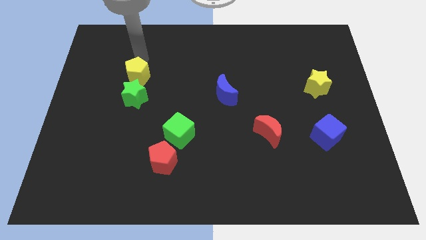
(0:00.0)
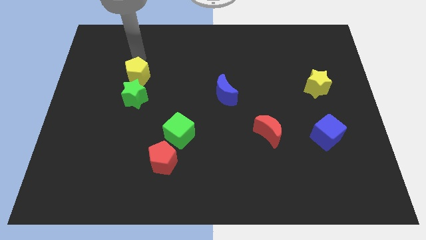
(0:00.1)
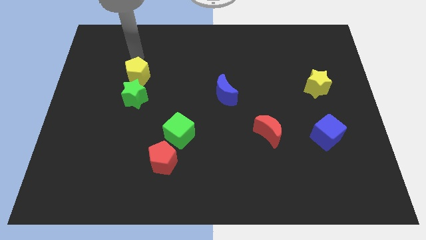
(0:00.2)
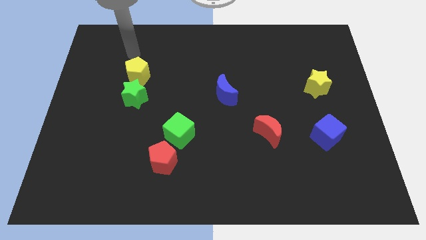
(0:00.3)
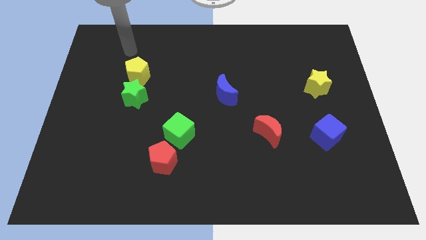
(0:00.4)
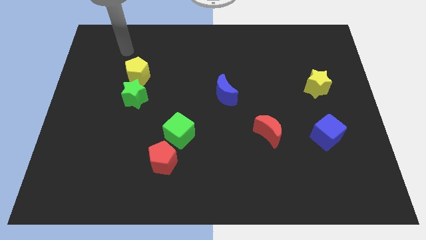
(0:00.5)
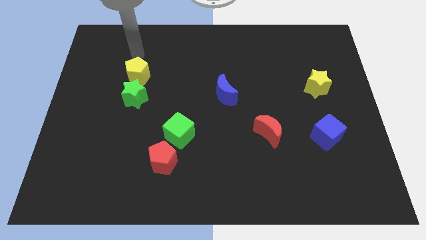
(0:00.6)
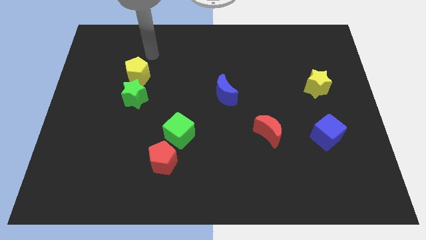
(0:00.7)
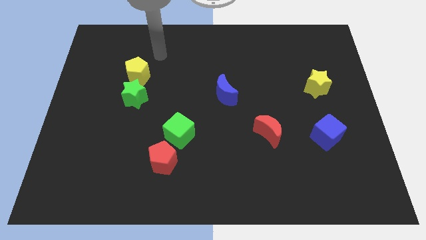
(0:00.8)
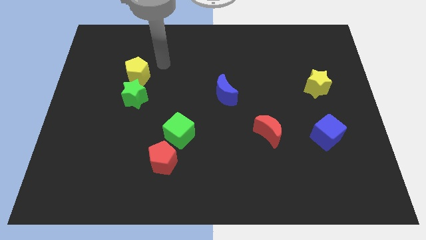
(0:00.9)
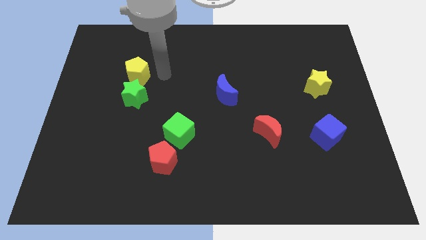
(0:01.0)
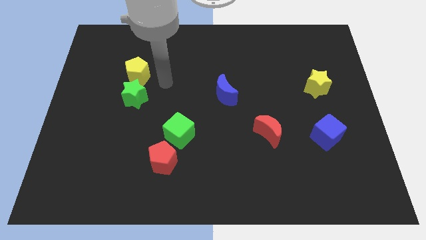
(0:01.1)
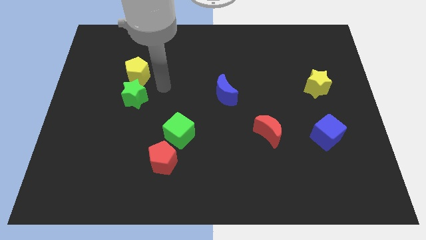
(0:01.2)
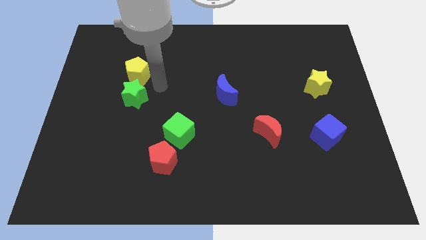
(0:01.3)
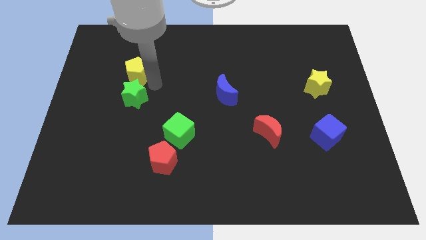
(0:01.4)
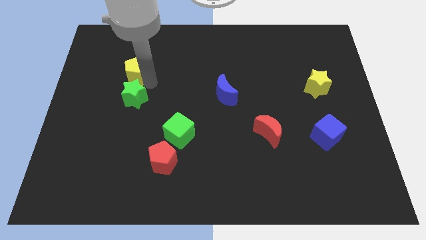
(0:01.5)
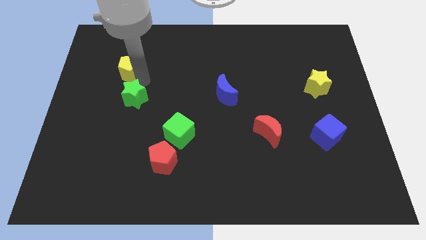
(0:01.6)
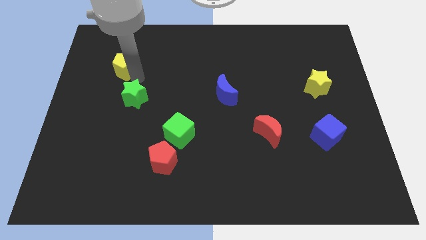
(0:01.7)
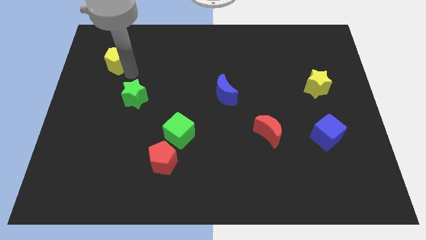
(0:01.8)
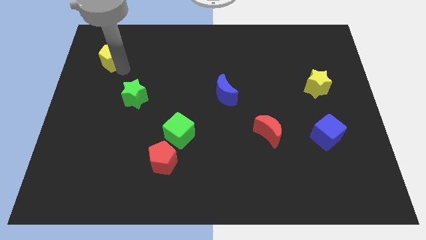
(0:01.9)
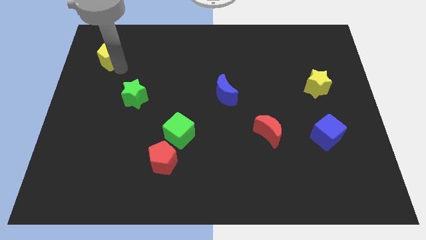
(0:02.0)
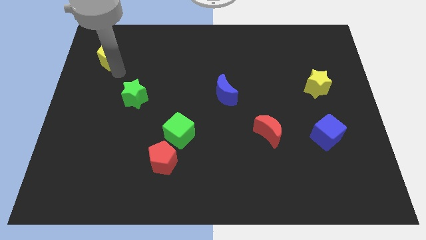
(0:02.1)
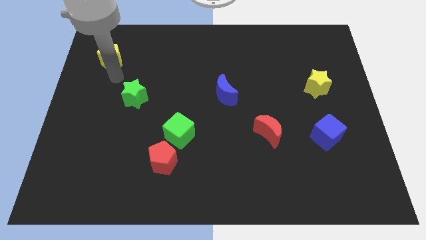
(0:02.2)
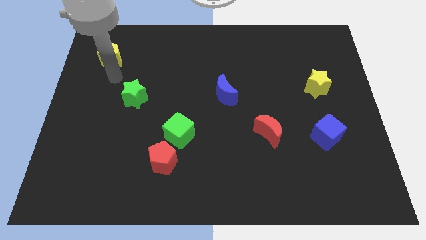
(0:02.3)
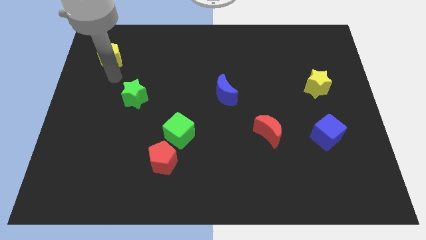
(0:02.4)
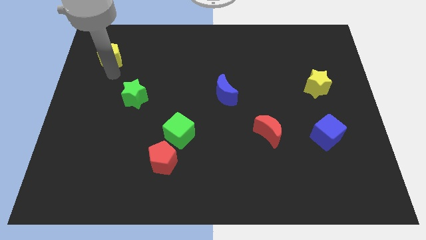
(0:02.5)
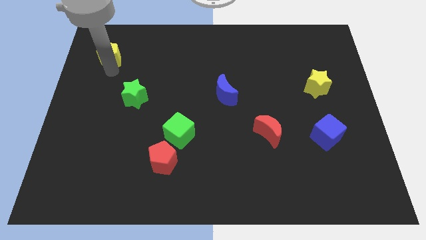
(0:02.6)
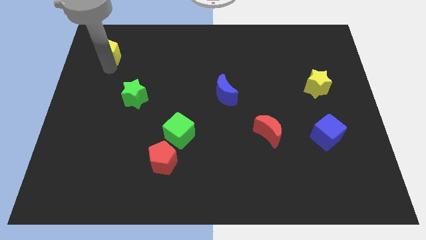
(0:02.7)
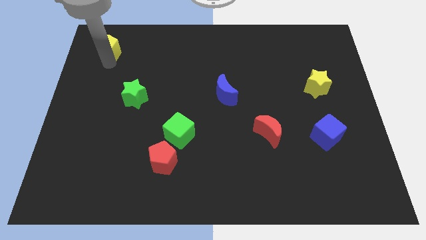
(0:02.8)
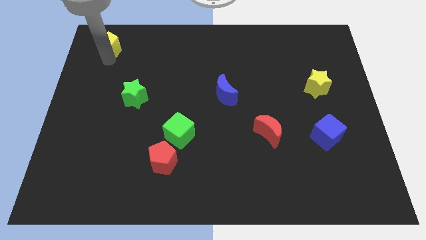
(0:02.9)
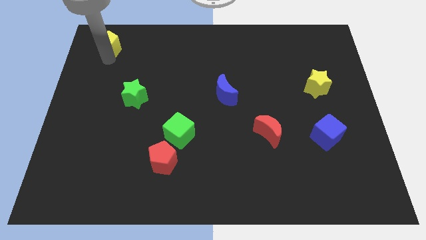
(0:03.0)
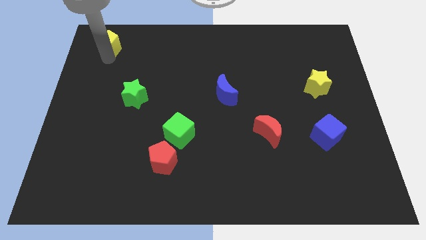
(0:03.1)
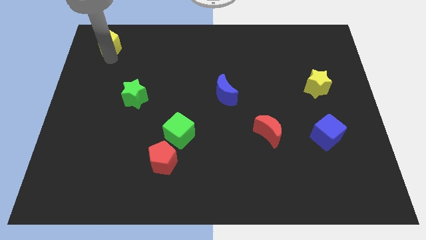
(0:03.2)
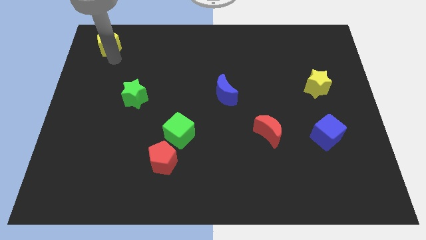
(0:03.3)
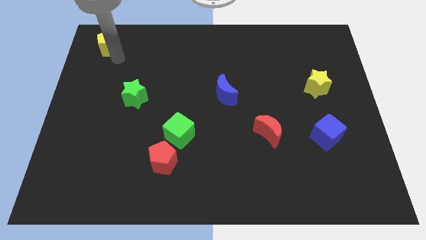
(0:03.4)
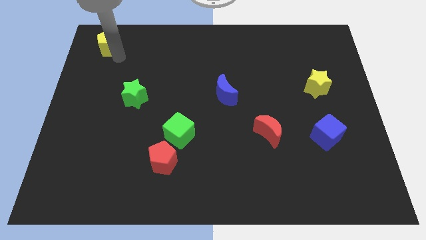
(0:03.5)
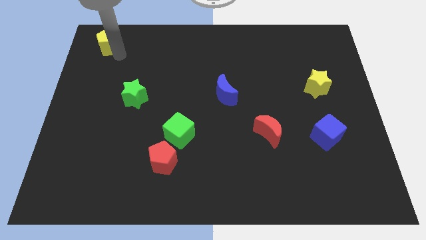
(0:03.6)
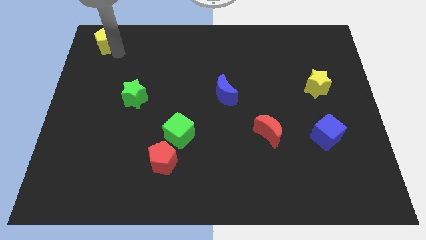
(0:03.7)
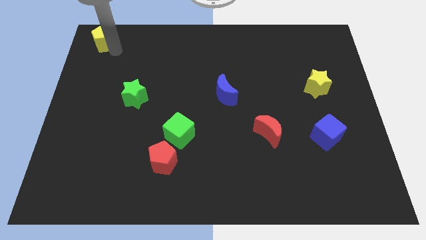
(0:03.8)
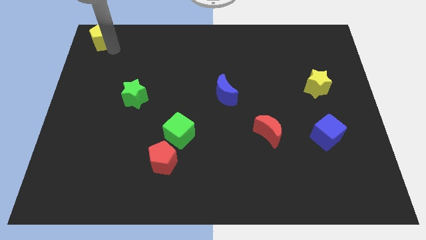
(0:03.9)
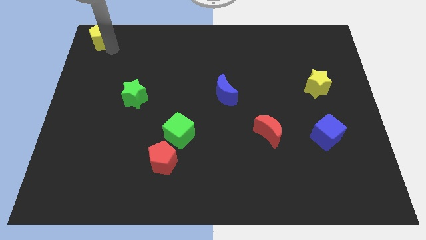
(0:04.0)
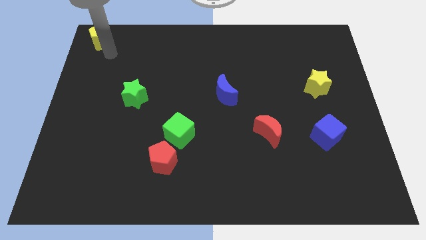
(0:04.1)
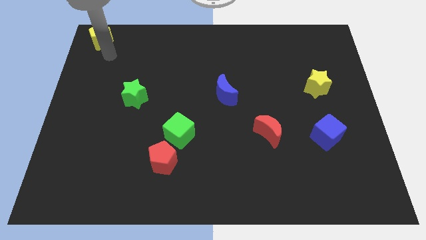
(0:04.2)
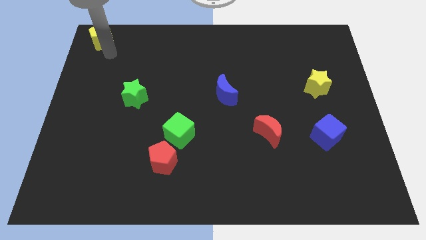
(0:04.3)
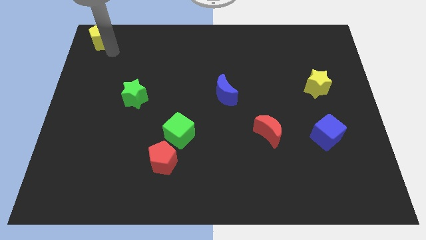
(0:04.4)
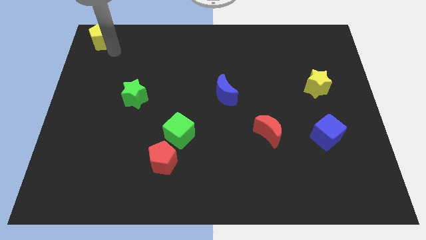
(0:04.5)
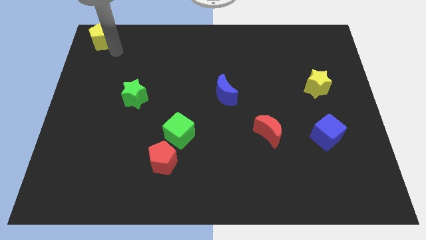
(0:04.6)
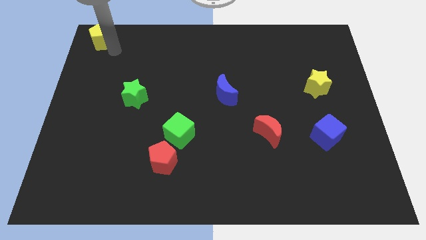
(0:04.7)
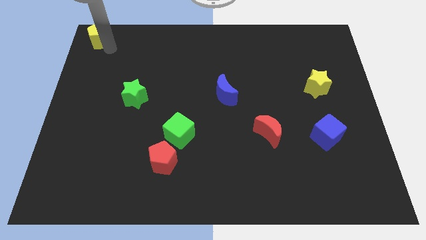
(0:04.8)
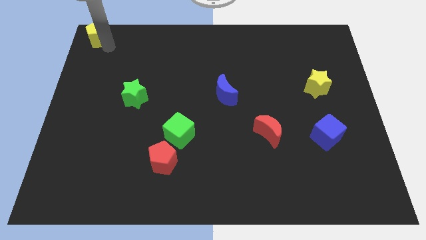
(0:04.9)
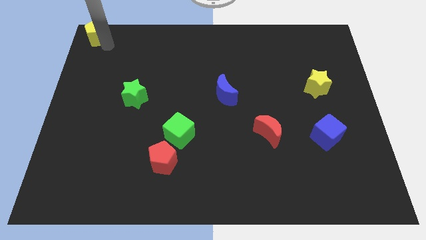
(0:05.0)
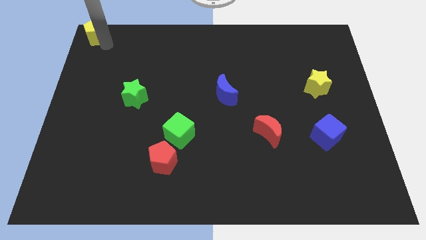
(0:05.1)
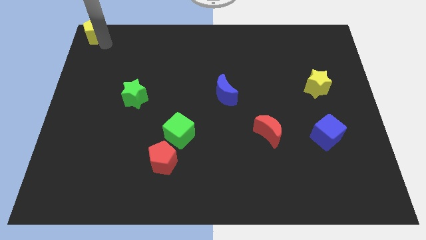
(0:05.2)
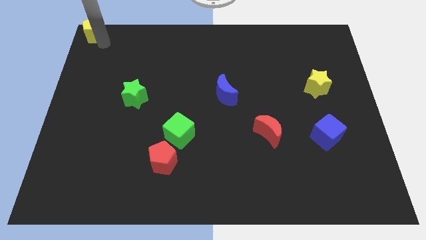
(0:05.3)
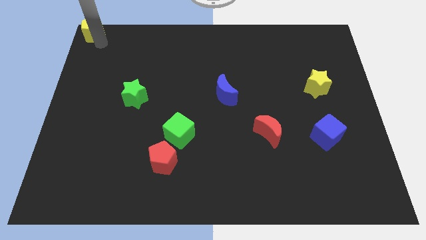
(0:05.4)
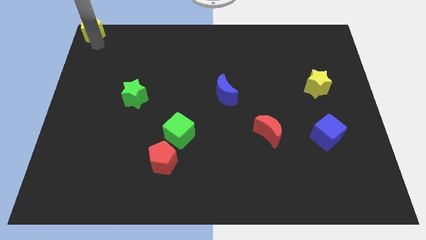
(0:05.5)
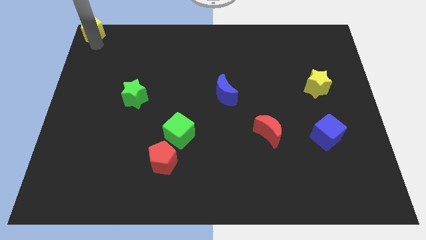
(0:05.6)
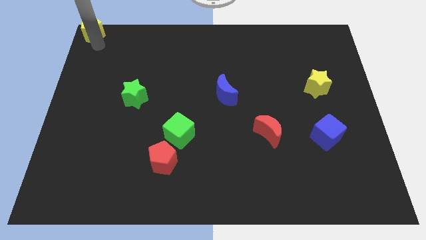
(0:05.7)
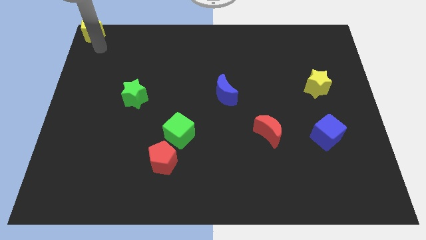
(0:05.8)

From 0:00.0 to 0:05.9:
push yellow pentagon to the top left corner of the board

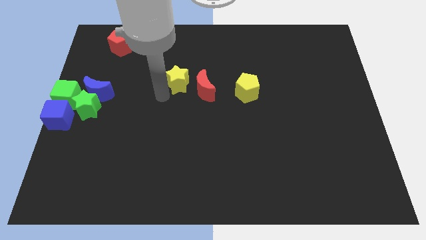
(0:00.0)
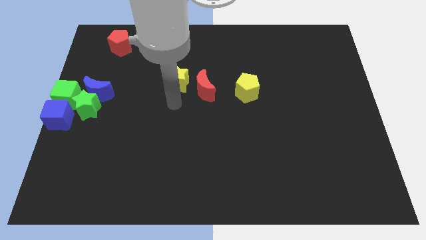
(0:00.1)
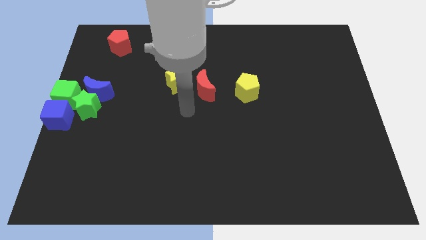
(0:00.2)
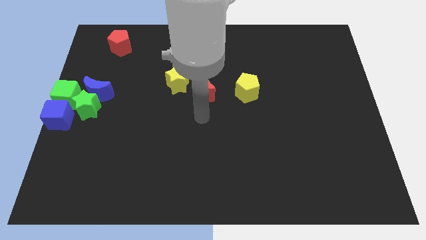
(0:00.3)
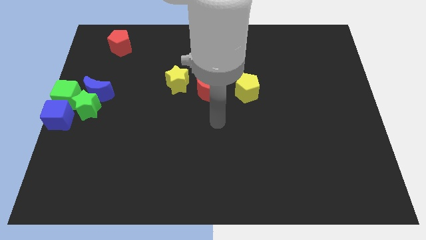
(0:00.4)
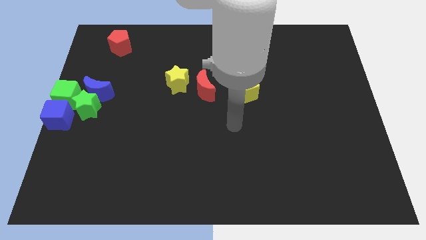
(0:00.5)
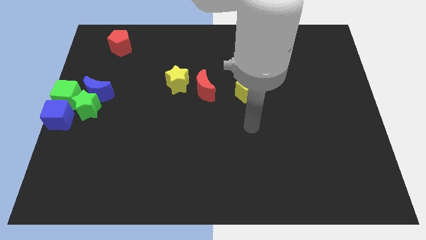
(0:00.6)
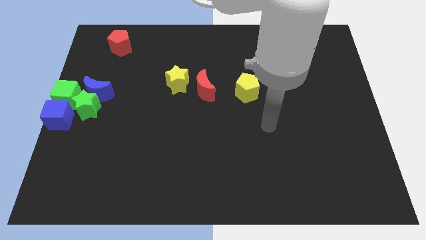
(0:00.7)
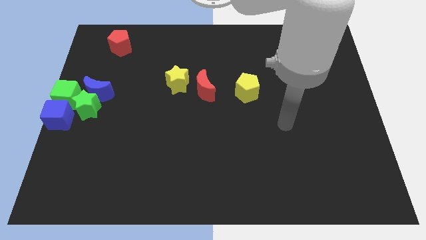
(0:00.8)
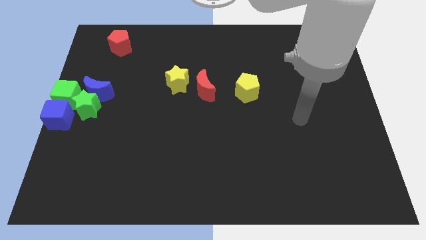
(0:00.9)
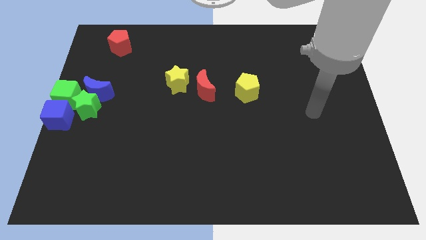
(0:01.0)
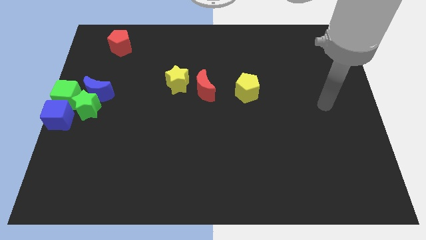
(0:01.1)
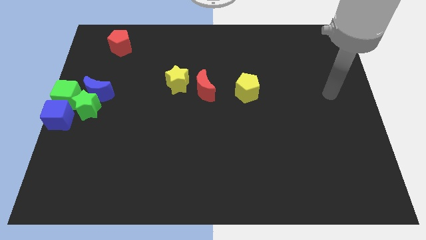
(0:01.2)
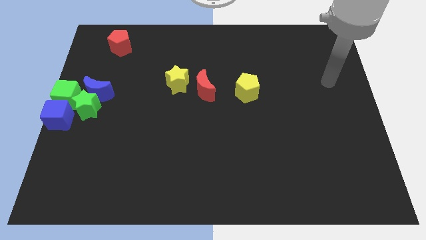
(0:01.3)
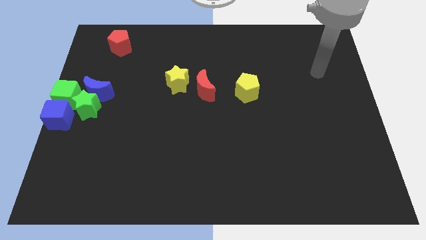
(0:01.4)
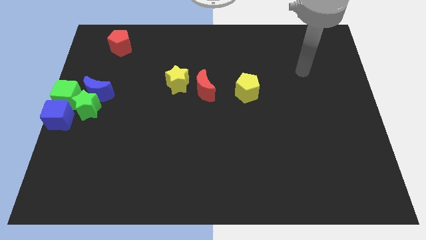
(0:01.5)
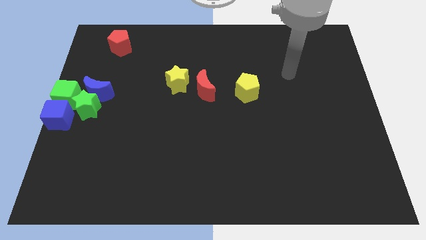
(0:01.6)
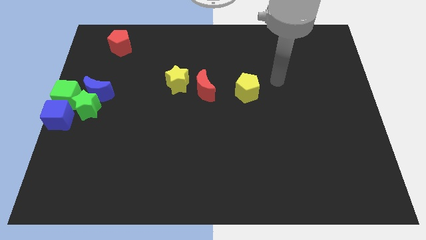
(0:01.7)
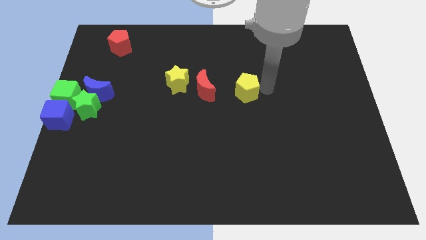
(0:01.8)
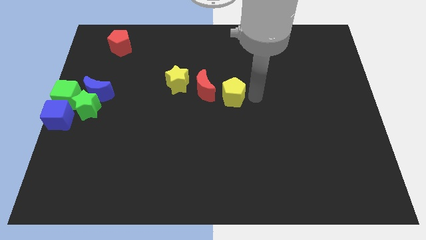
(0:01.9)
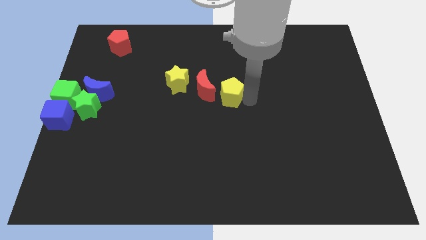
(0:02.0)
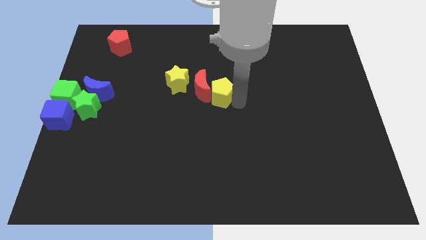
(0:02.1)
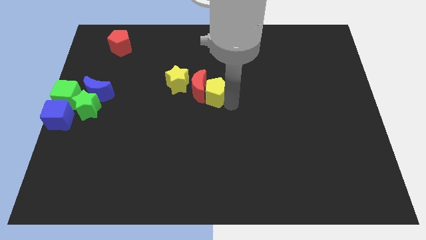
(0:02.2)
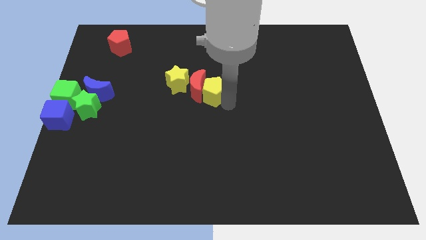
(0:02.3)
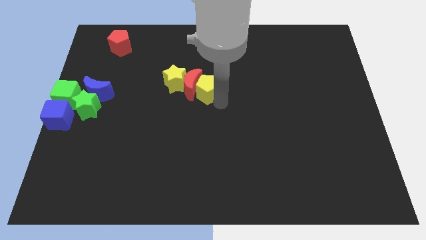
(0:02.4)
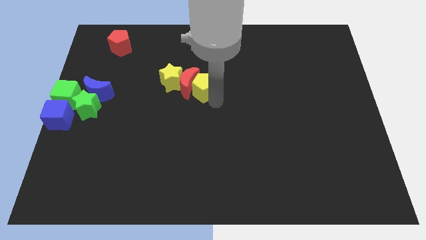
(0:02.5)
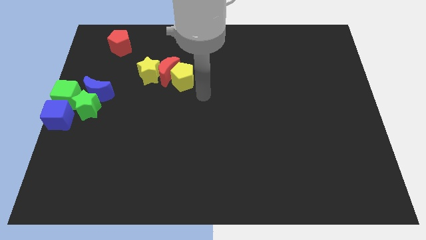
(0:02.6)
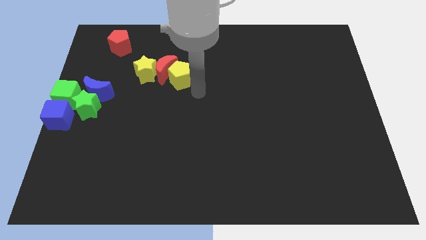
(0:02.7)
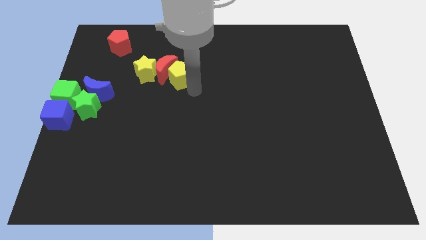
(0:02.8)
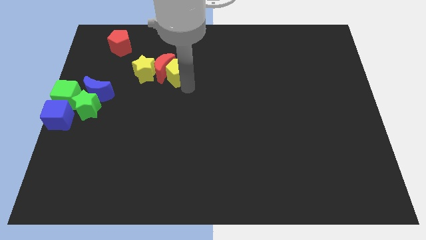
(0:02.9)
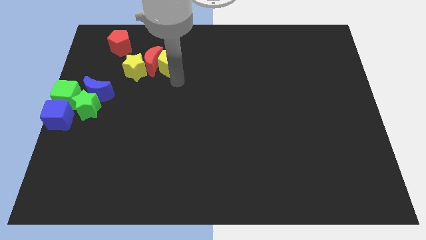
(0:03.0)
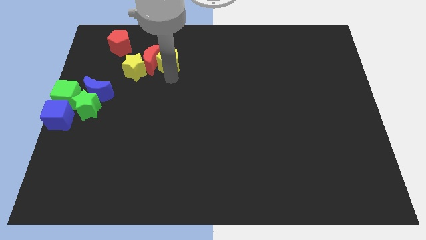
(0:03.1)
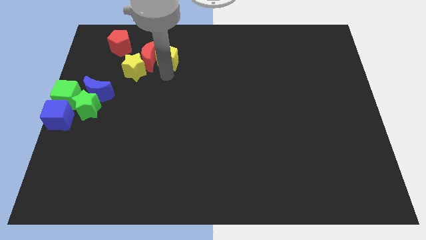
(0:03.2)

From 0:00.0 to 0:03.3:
push the yellow pentagon into the red crescent
